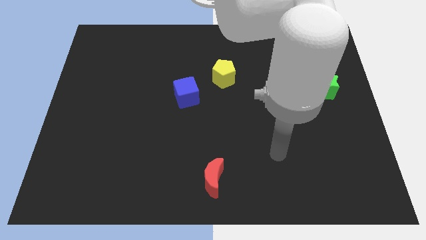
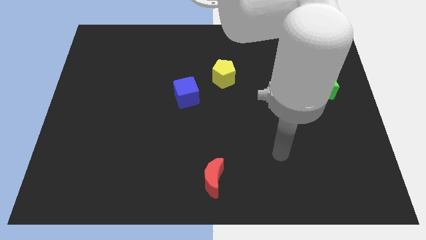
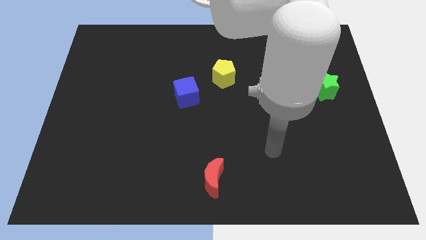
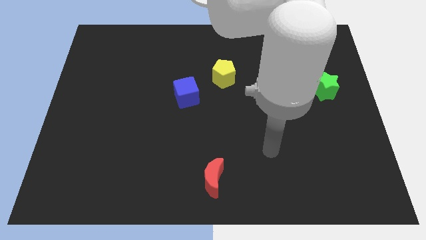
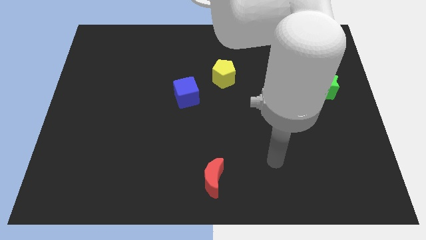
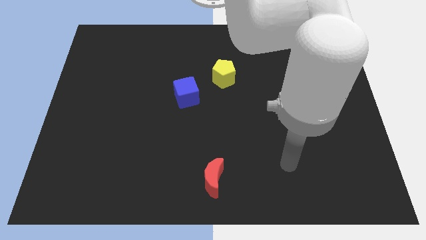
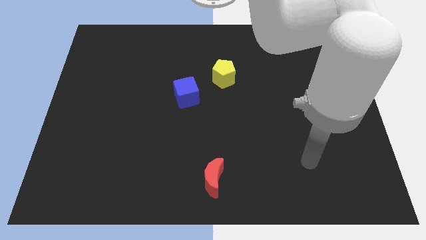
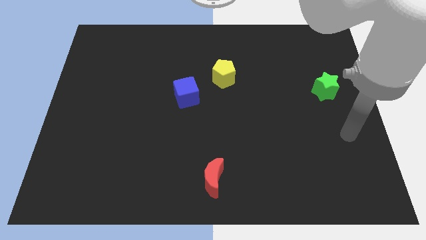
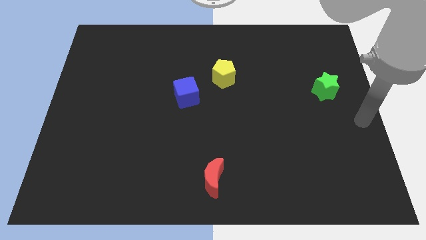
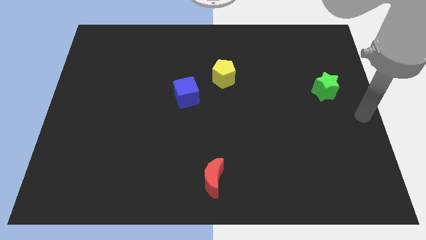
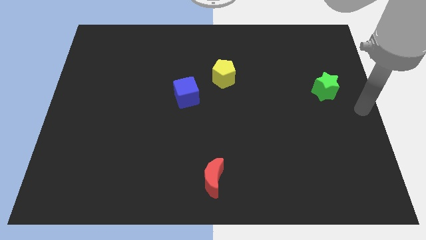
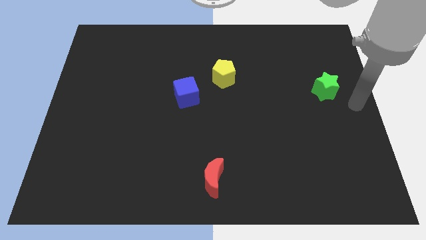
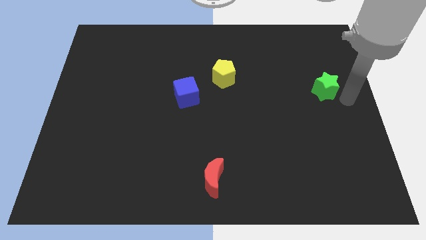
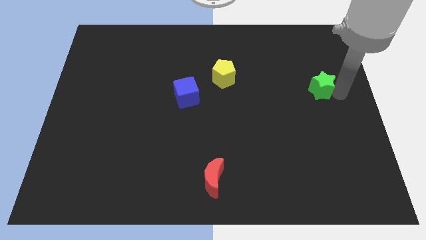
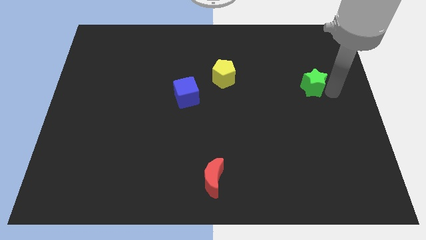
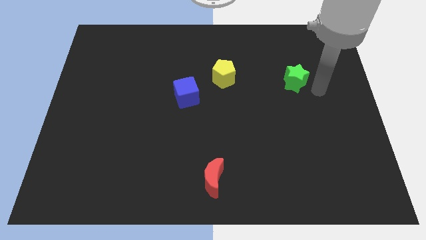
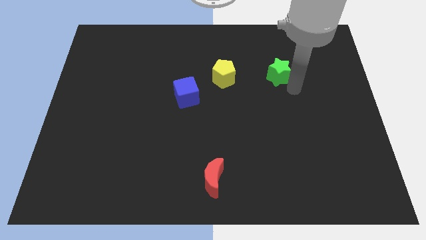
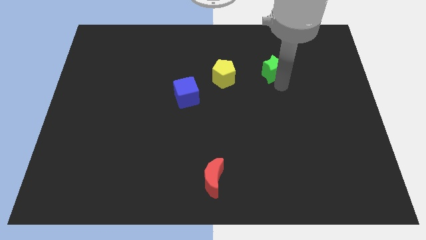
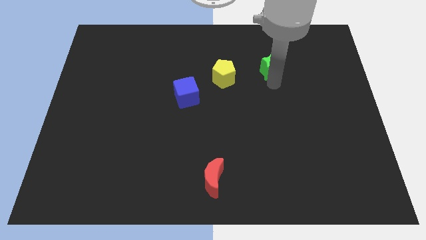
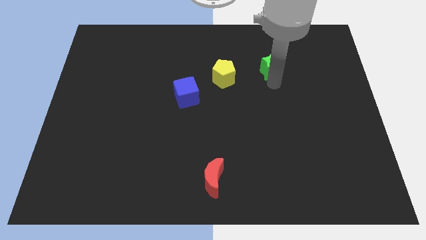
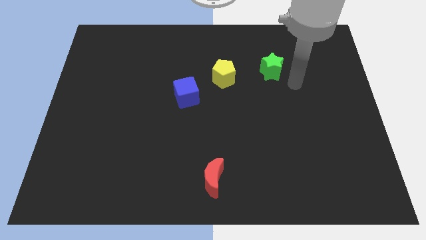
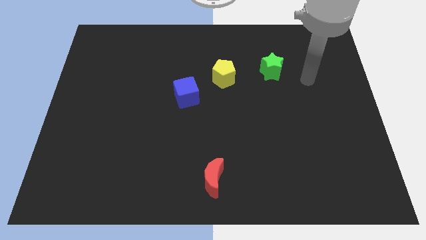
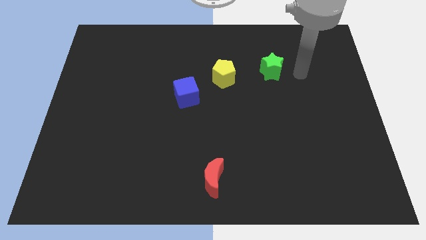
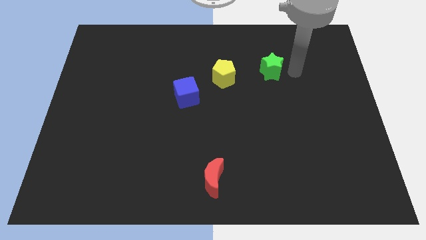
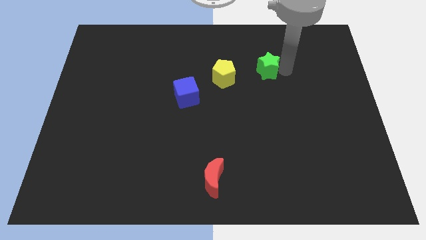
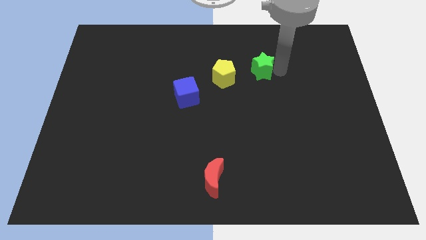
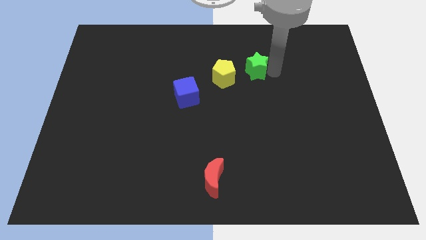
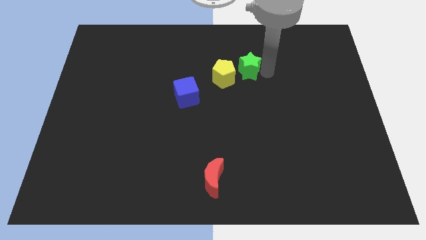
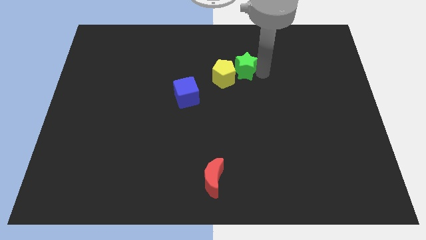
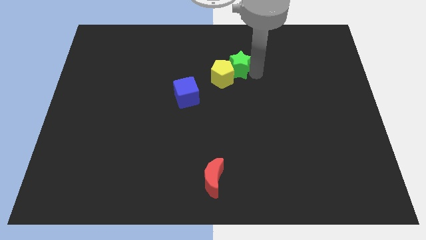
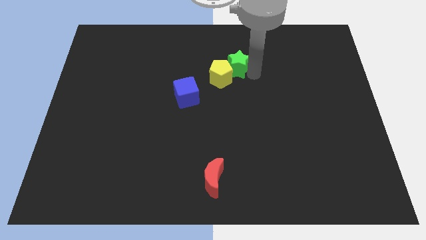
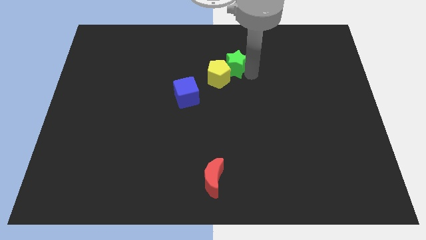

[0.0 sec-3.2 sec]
move the green block towards the yellow pentagon

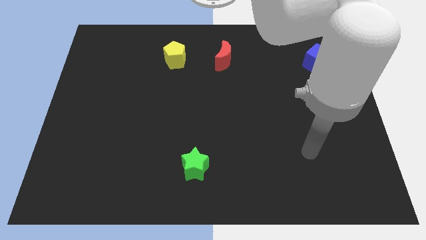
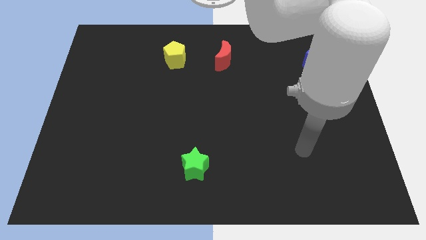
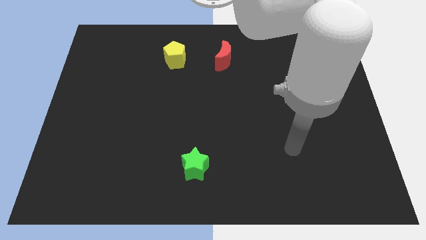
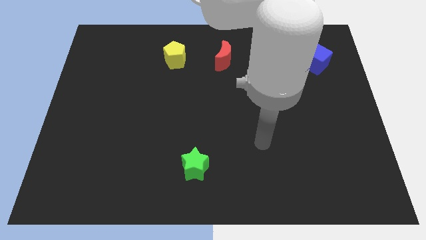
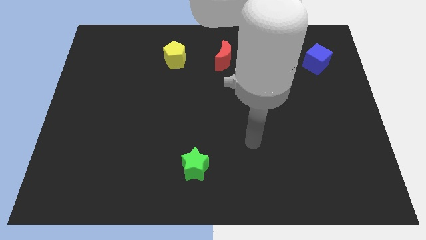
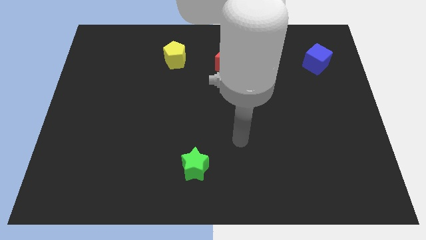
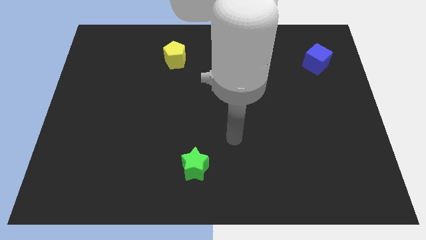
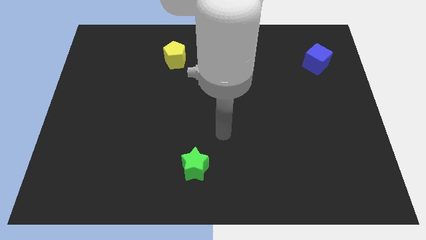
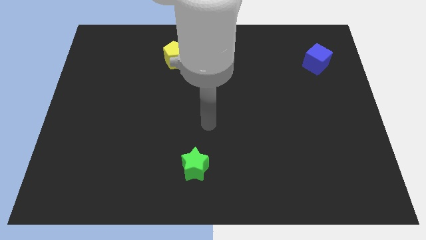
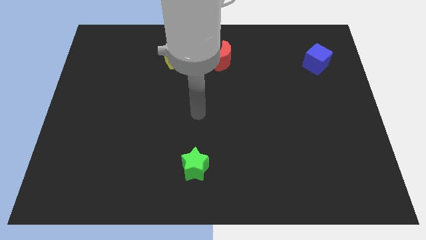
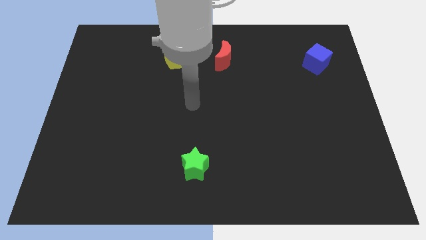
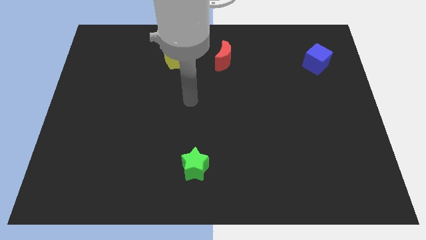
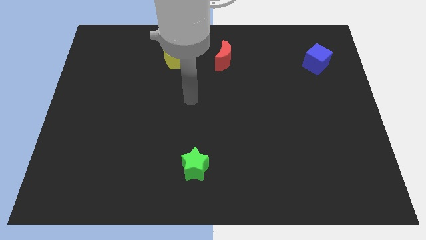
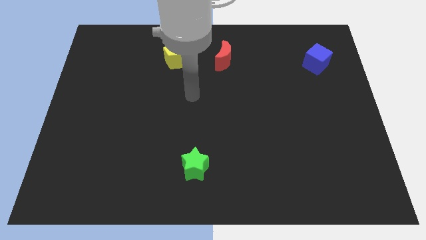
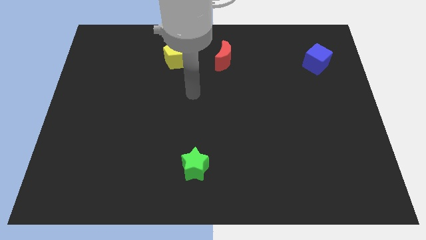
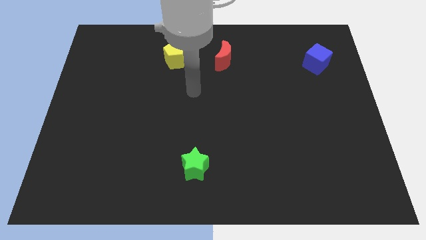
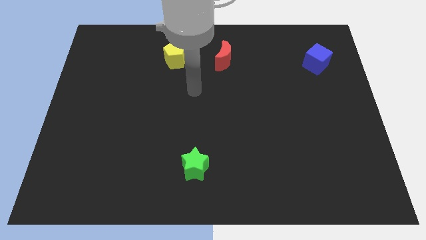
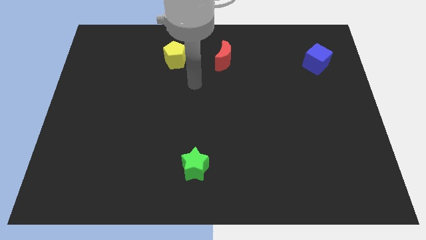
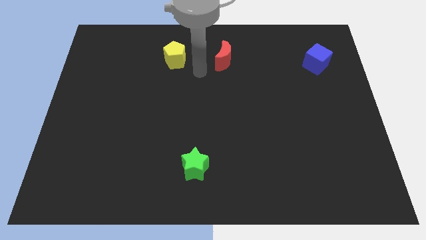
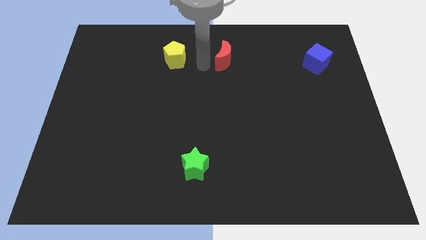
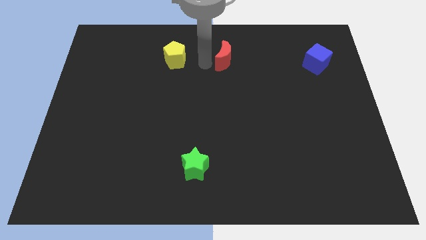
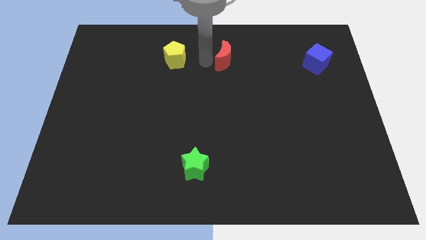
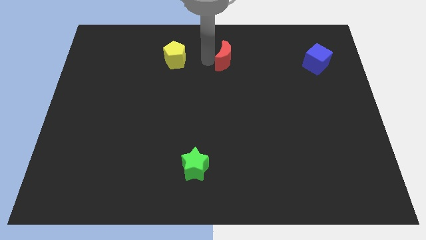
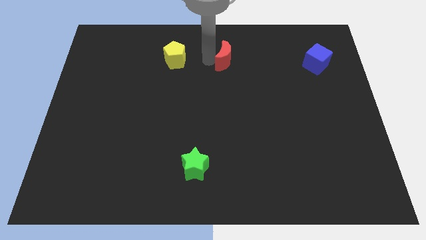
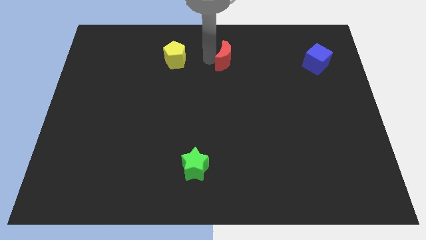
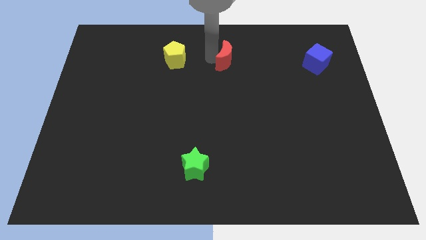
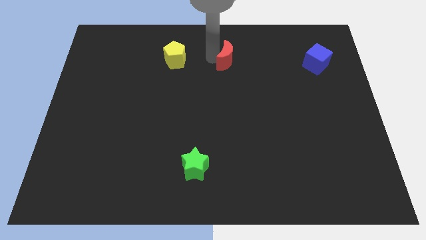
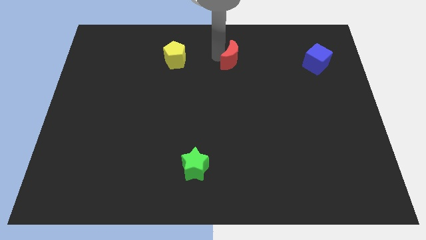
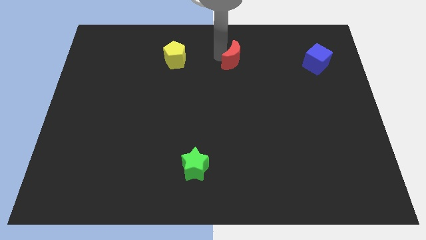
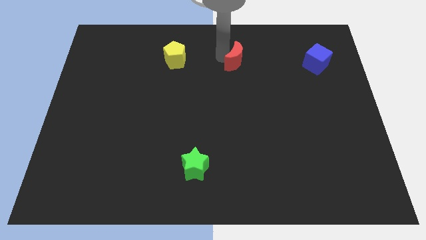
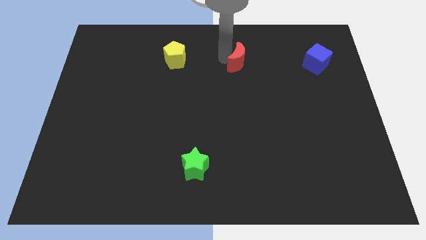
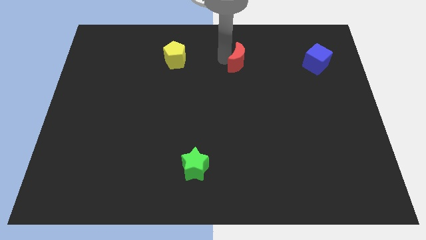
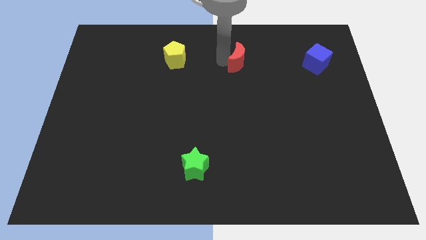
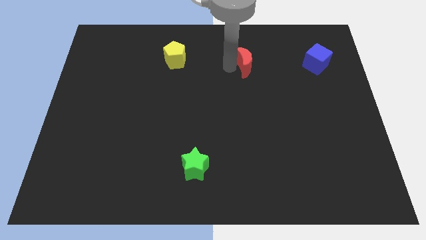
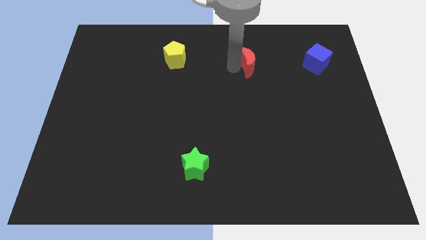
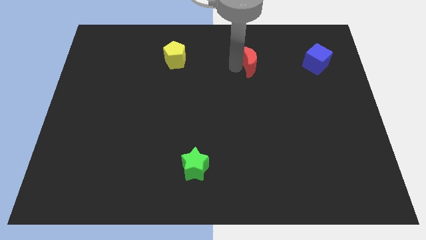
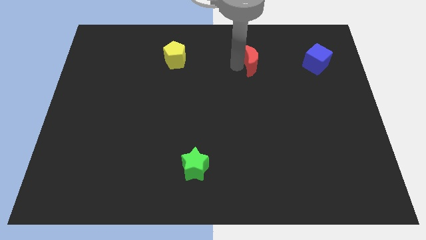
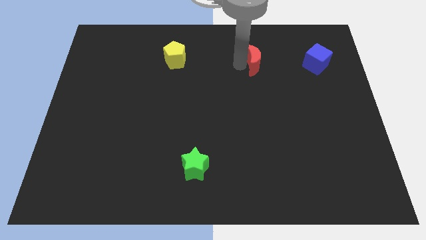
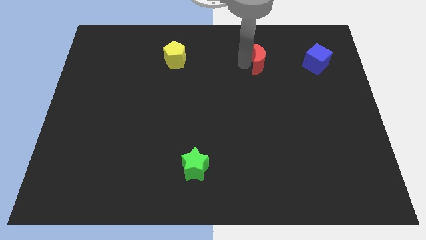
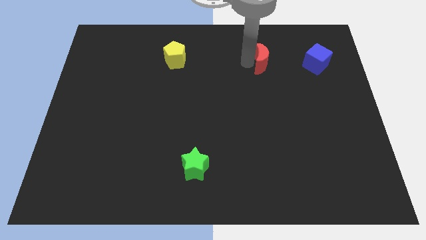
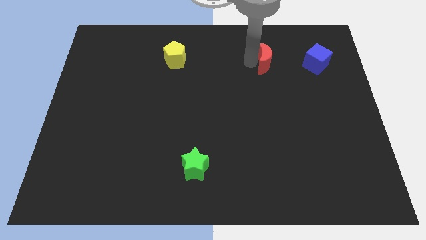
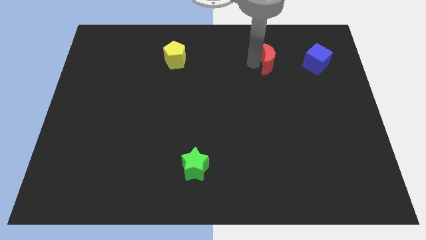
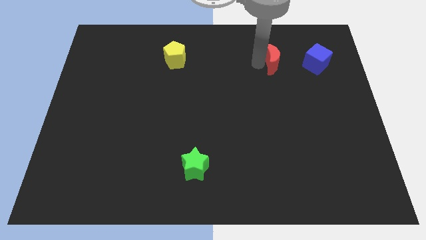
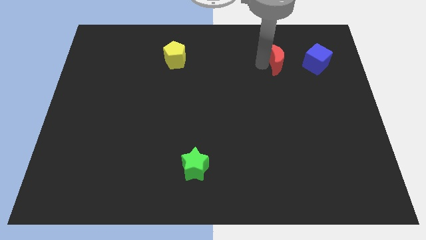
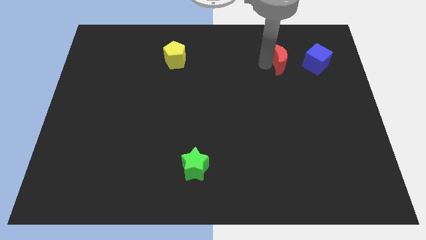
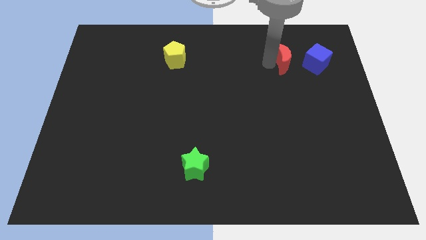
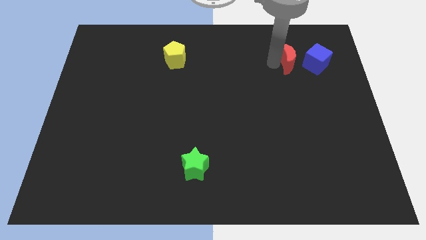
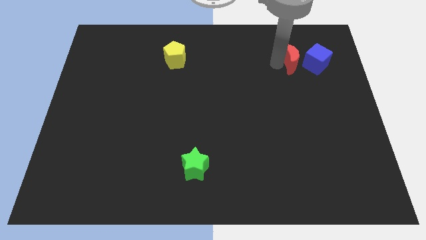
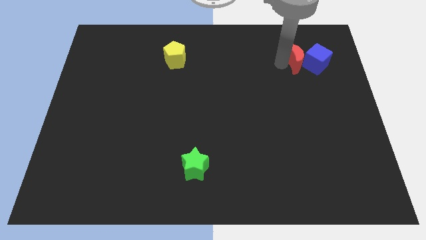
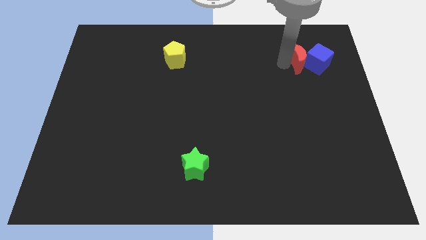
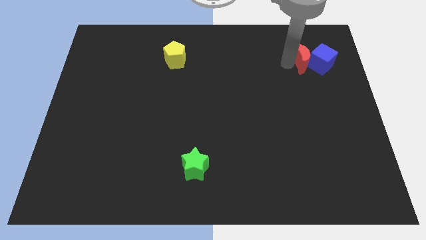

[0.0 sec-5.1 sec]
push the moon to the blue cube
